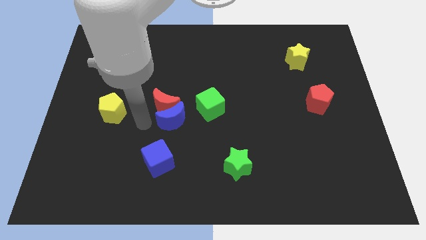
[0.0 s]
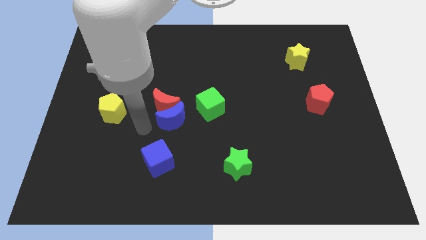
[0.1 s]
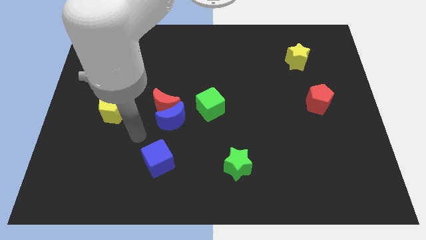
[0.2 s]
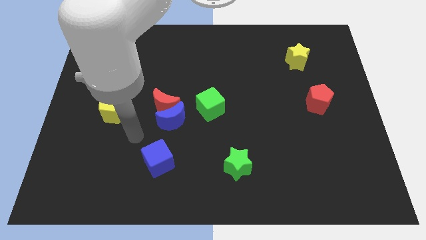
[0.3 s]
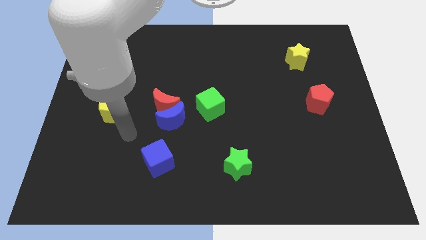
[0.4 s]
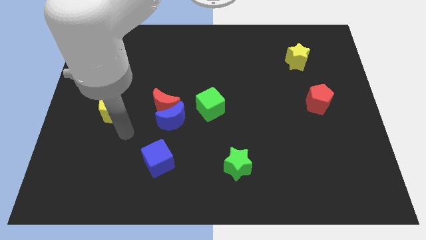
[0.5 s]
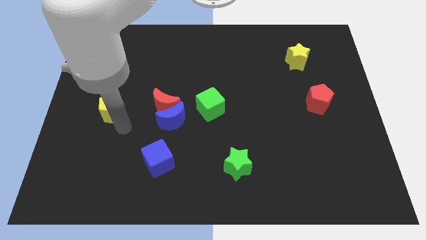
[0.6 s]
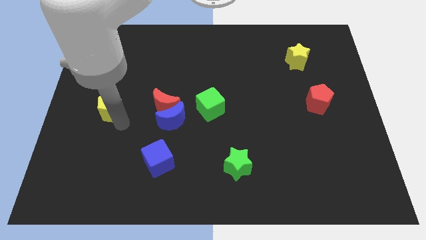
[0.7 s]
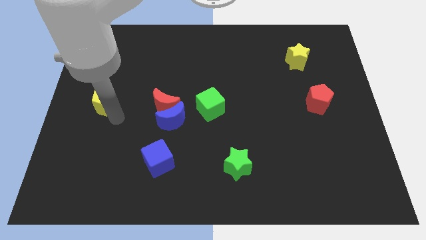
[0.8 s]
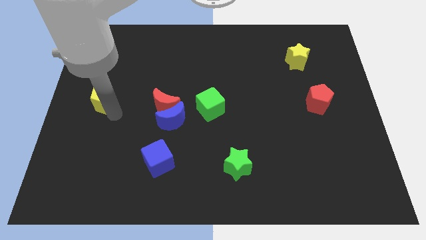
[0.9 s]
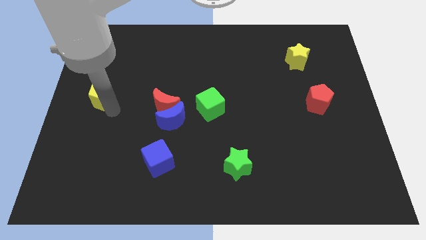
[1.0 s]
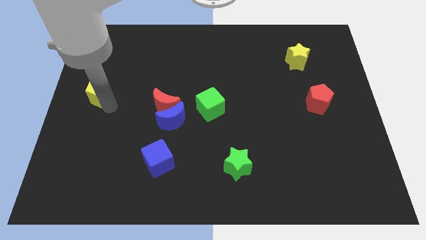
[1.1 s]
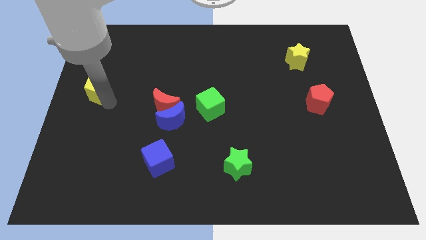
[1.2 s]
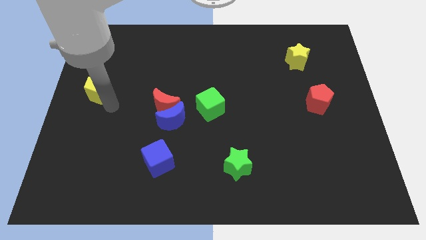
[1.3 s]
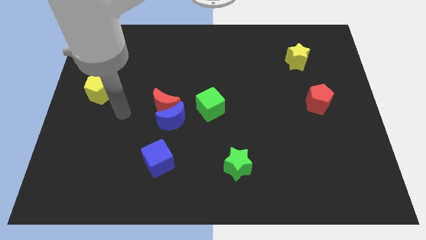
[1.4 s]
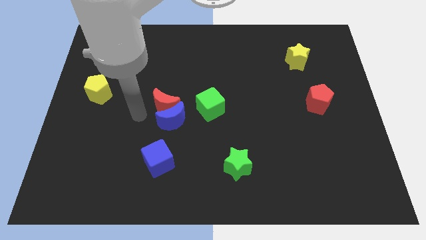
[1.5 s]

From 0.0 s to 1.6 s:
push yellow pentagon a bit upwards

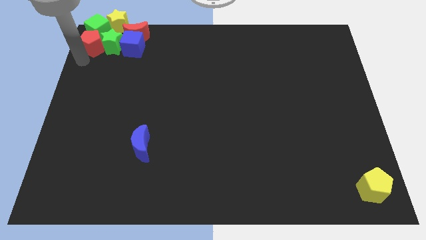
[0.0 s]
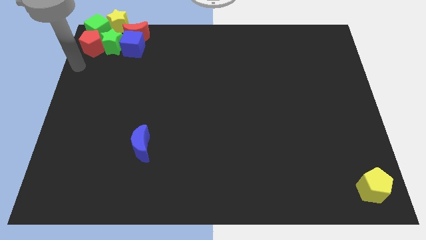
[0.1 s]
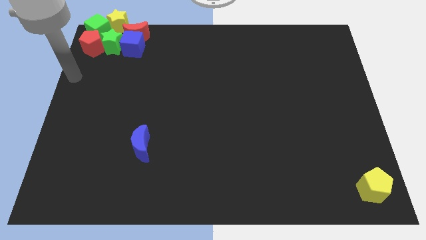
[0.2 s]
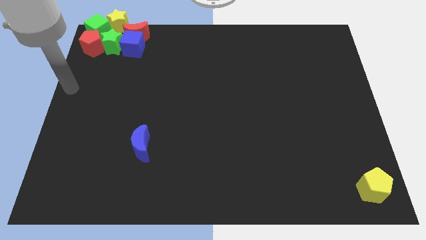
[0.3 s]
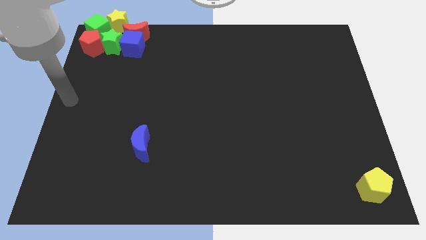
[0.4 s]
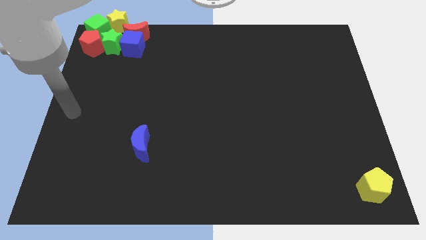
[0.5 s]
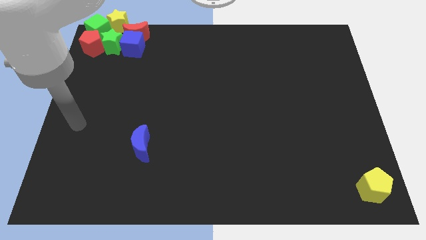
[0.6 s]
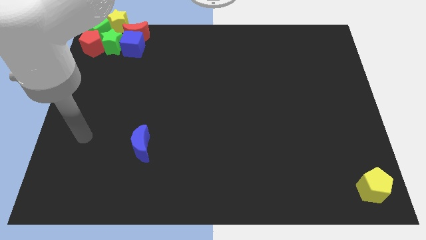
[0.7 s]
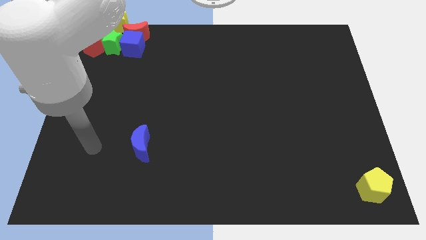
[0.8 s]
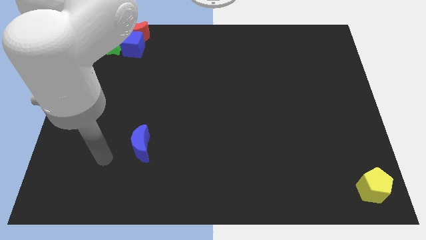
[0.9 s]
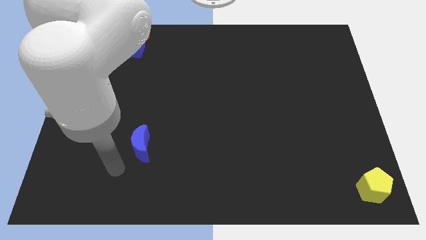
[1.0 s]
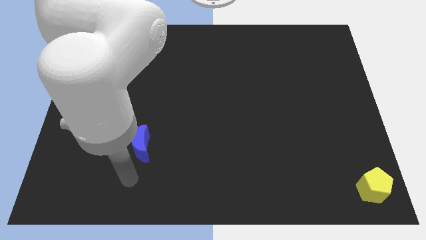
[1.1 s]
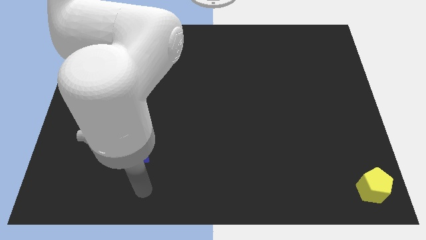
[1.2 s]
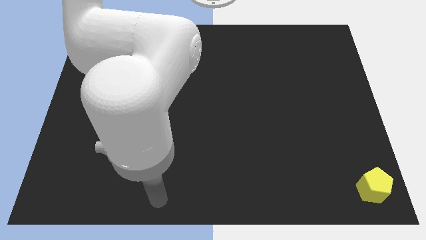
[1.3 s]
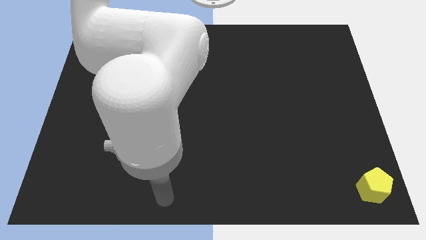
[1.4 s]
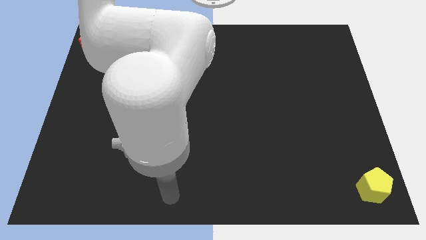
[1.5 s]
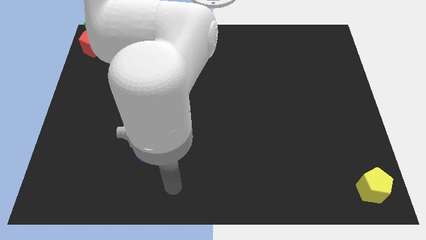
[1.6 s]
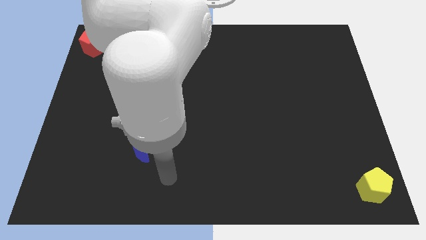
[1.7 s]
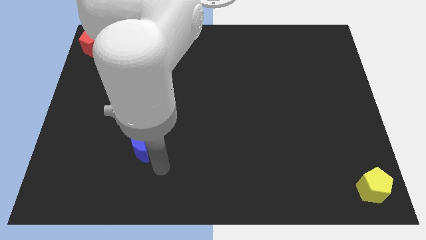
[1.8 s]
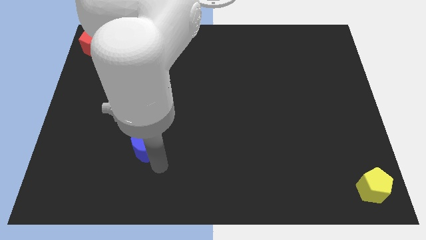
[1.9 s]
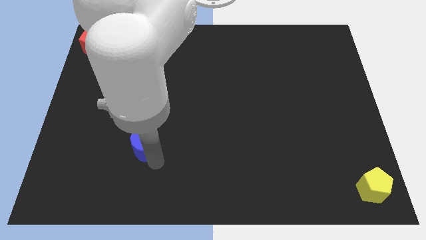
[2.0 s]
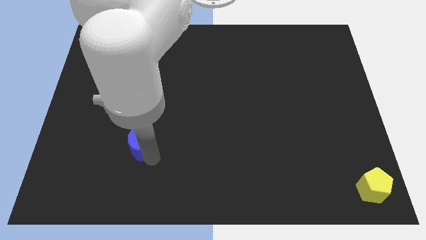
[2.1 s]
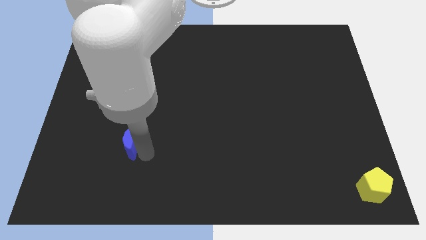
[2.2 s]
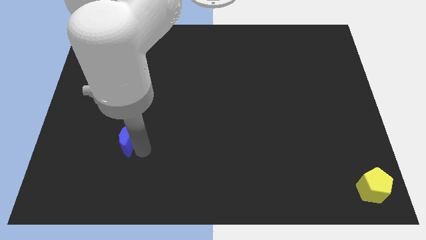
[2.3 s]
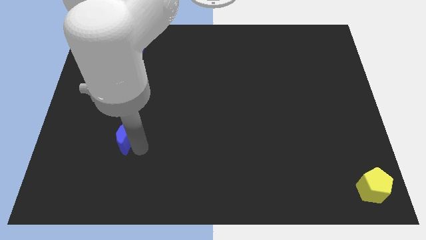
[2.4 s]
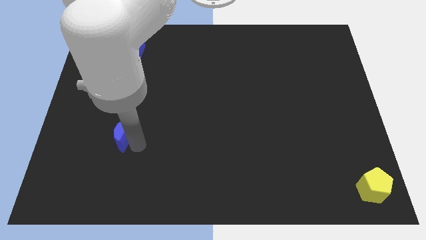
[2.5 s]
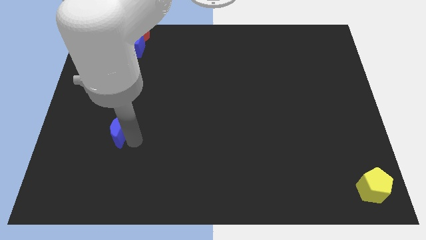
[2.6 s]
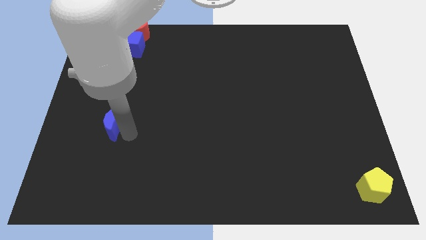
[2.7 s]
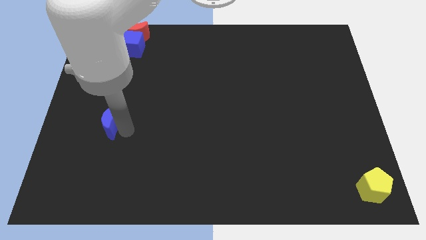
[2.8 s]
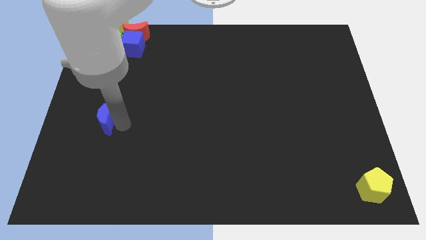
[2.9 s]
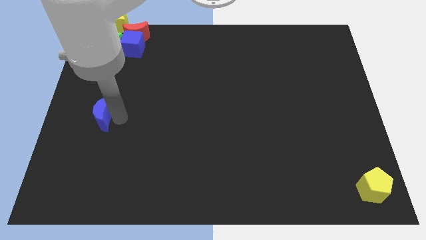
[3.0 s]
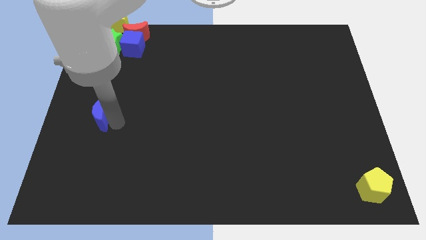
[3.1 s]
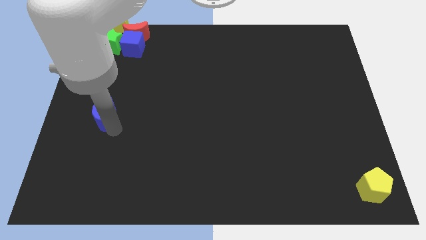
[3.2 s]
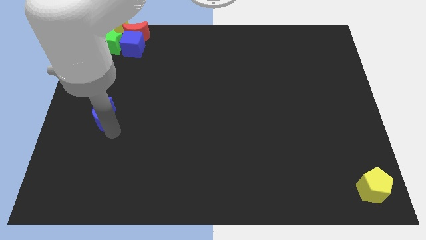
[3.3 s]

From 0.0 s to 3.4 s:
place the blue moon to the center left side of the board

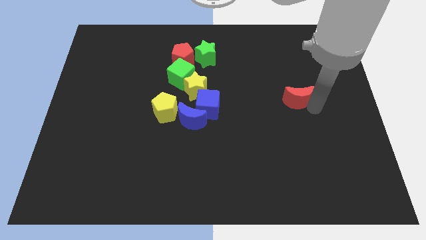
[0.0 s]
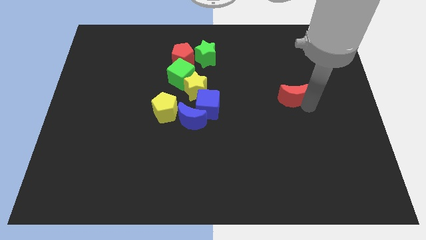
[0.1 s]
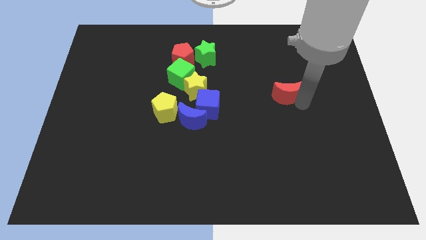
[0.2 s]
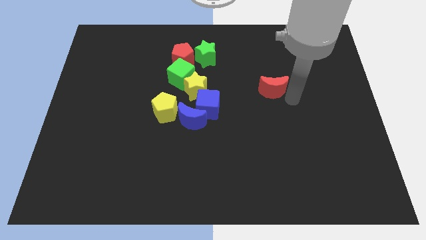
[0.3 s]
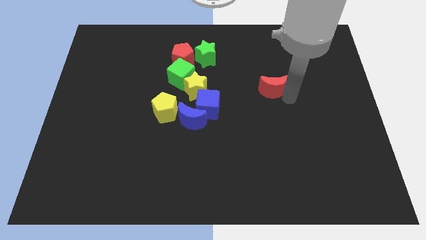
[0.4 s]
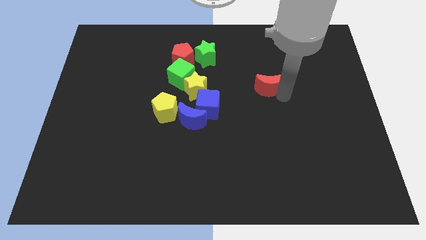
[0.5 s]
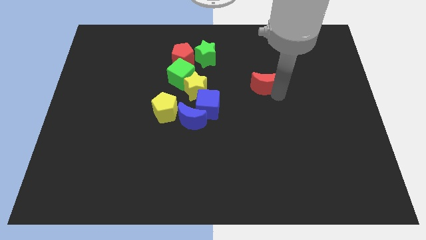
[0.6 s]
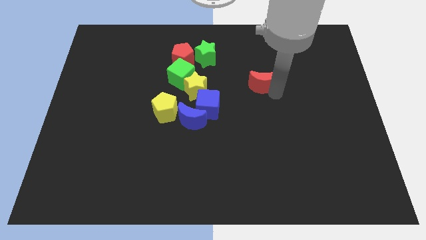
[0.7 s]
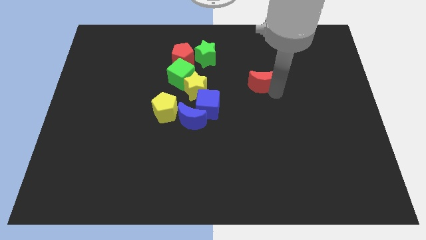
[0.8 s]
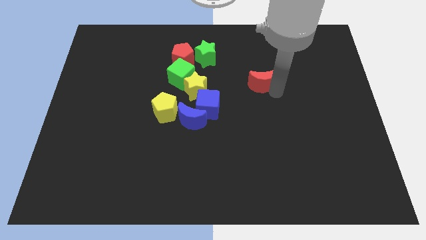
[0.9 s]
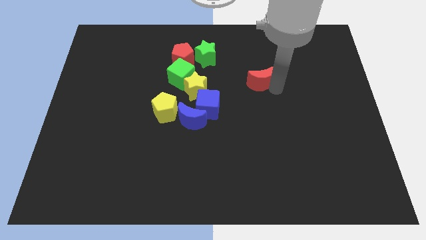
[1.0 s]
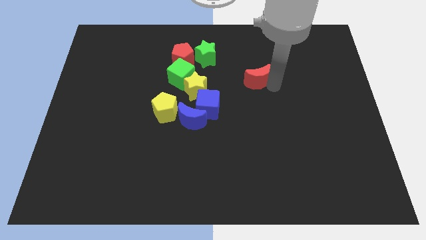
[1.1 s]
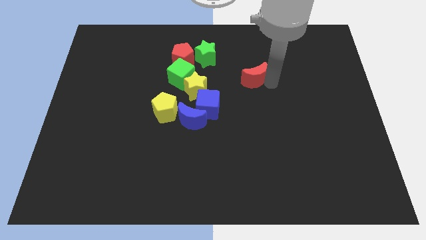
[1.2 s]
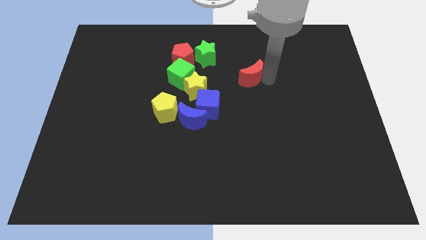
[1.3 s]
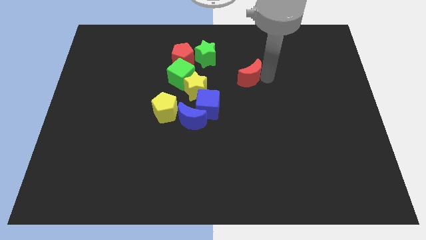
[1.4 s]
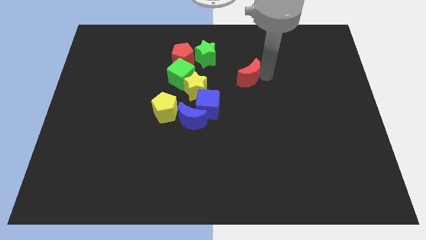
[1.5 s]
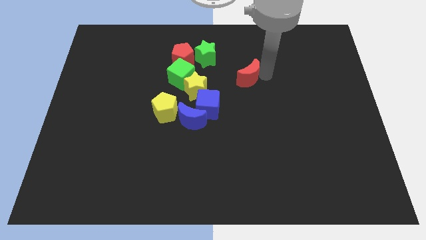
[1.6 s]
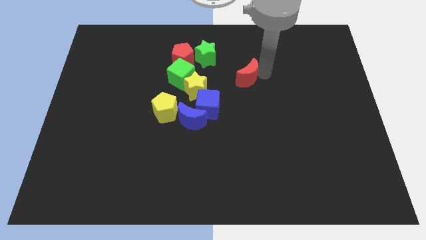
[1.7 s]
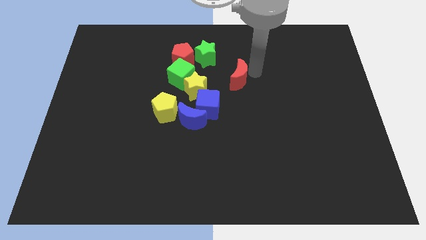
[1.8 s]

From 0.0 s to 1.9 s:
push the red moon upwards

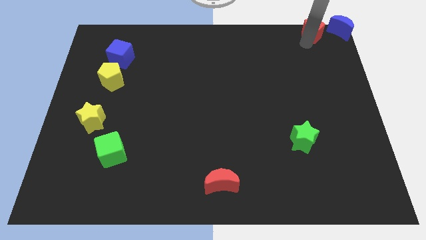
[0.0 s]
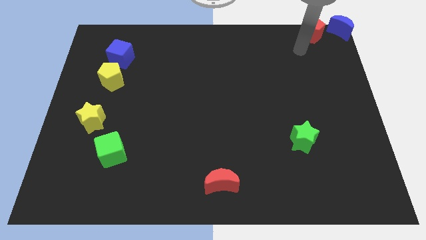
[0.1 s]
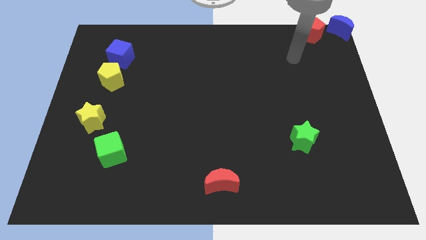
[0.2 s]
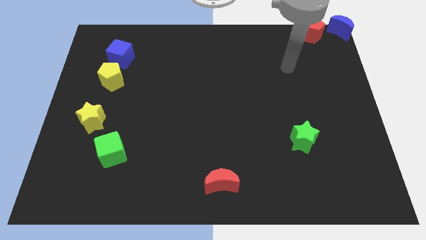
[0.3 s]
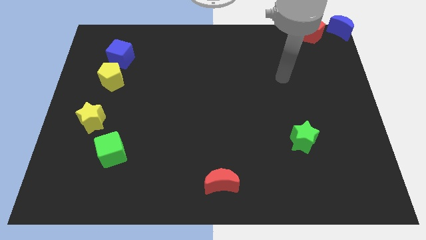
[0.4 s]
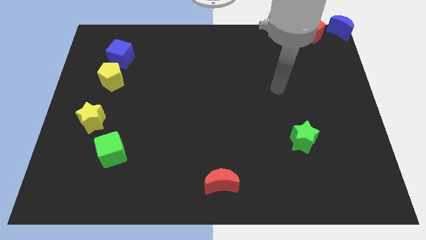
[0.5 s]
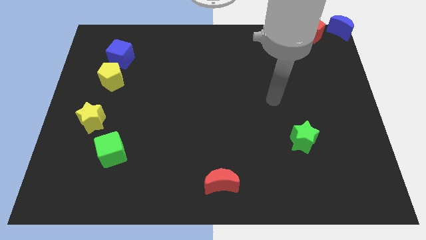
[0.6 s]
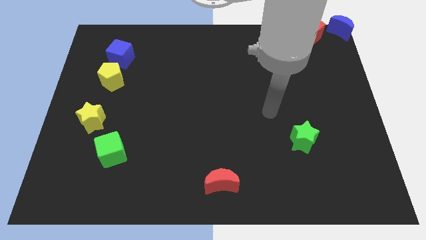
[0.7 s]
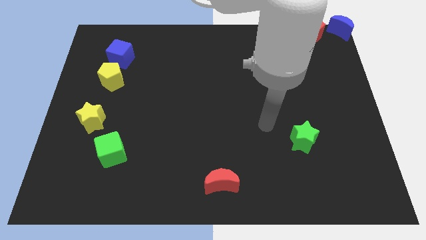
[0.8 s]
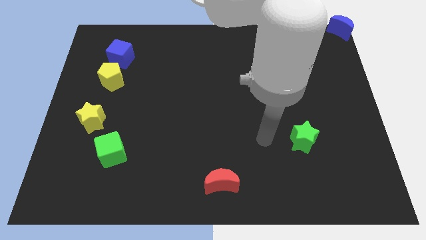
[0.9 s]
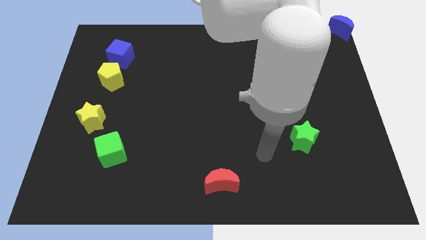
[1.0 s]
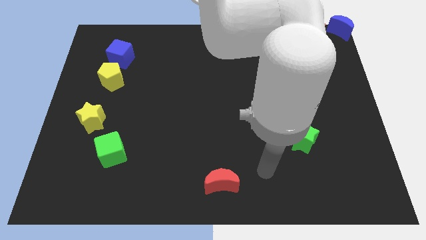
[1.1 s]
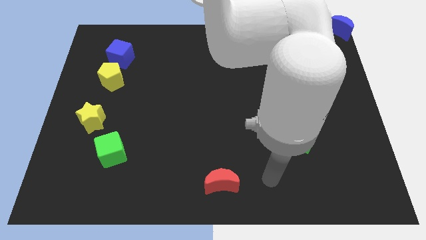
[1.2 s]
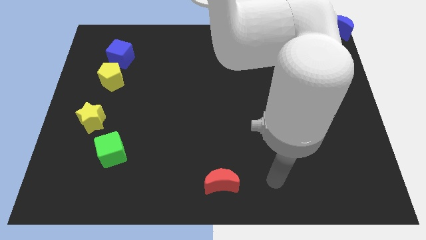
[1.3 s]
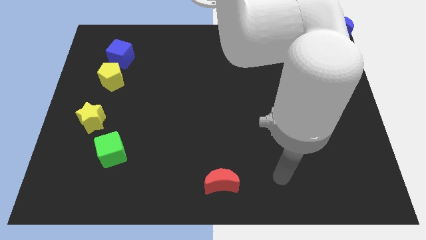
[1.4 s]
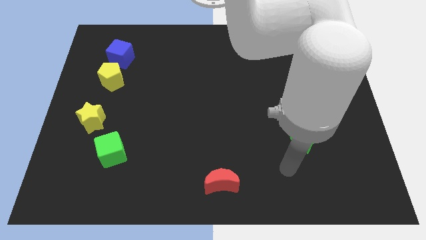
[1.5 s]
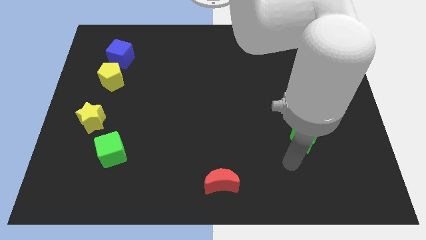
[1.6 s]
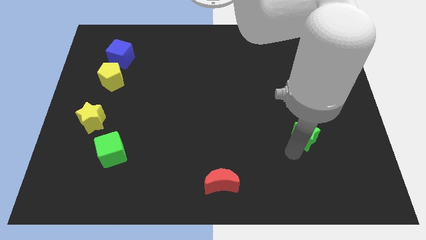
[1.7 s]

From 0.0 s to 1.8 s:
put your hand below the green star

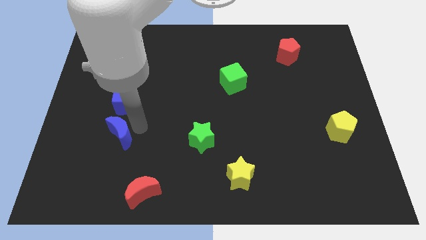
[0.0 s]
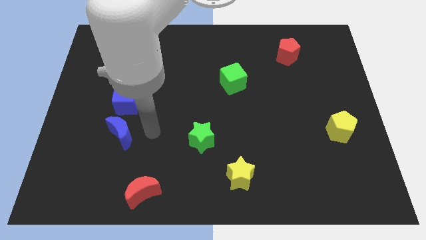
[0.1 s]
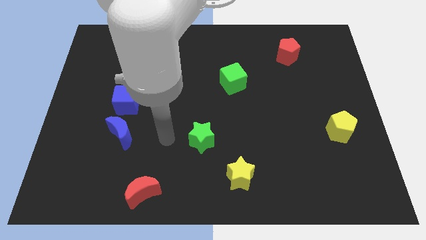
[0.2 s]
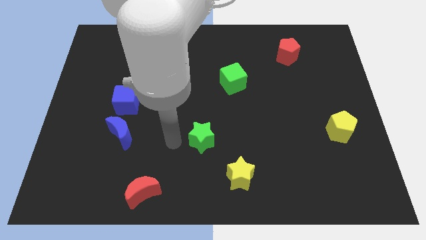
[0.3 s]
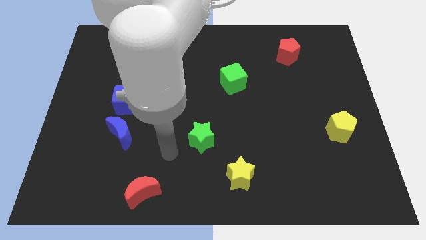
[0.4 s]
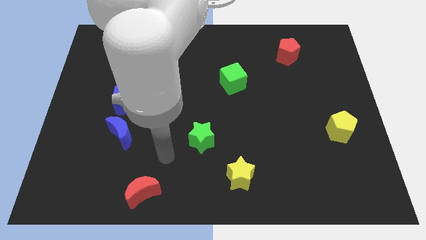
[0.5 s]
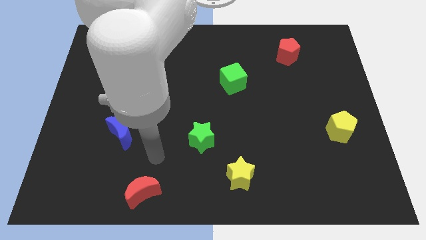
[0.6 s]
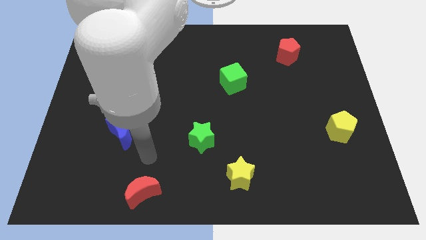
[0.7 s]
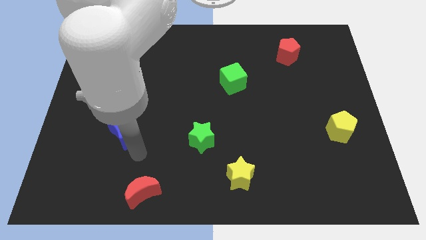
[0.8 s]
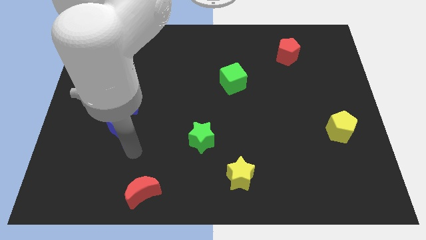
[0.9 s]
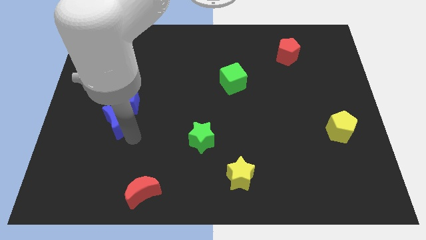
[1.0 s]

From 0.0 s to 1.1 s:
push blue moon into blue cube
